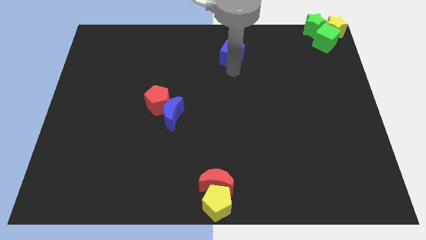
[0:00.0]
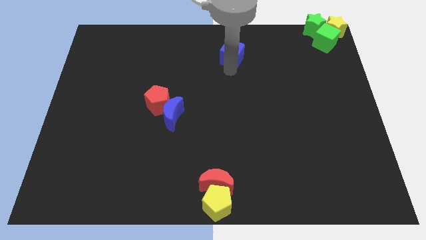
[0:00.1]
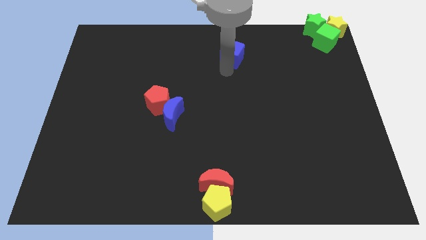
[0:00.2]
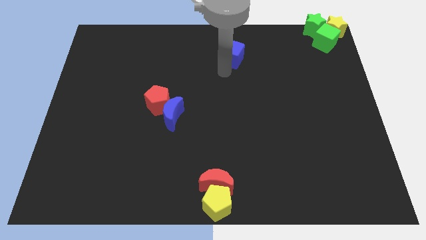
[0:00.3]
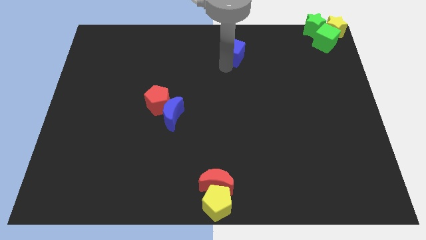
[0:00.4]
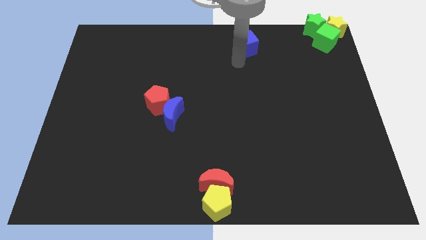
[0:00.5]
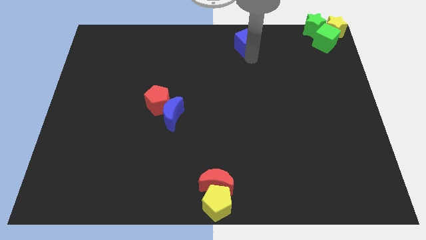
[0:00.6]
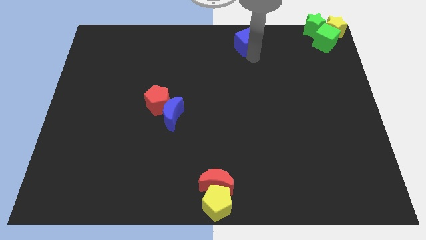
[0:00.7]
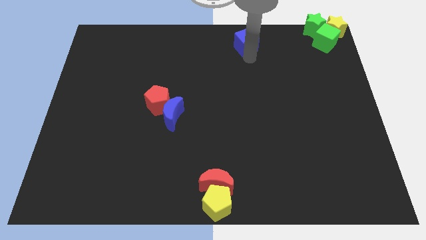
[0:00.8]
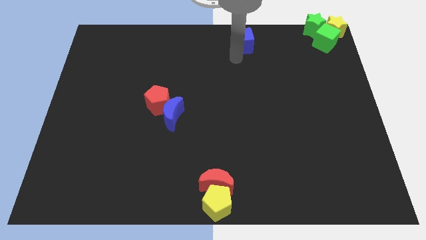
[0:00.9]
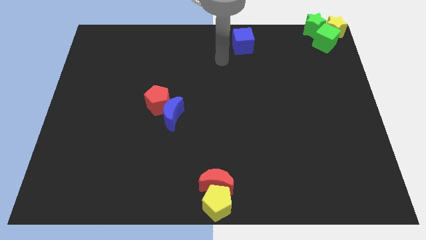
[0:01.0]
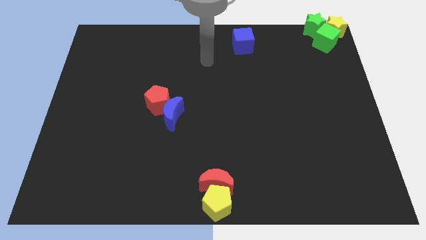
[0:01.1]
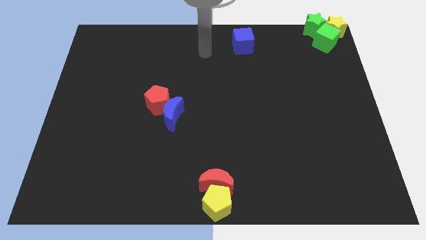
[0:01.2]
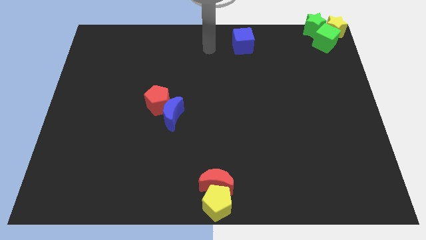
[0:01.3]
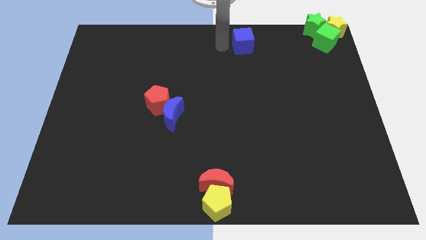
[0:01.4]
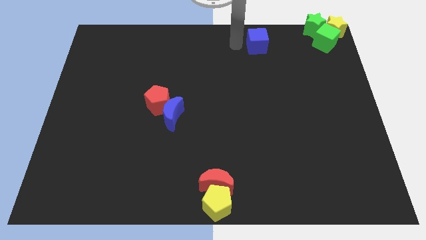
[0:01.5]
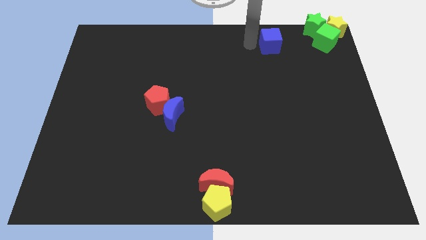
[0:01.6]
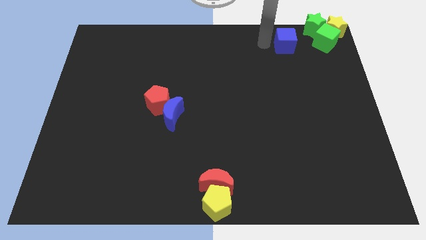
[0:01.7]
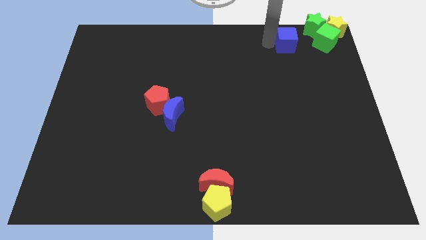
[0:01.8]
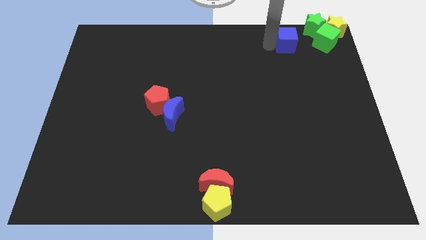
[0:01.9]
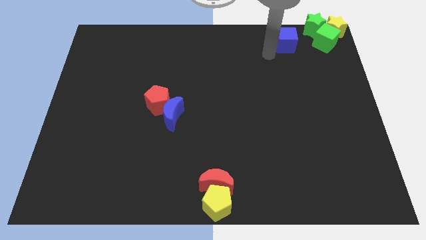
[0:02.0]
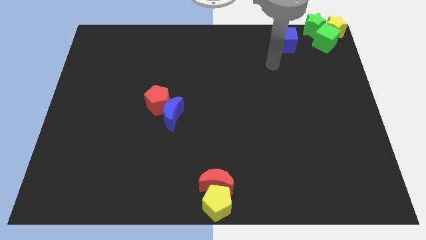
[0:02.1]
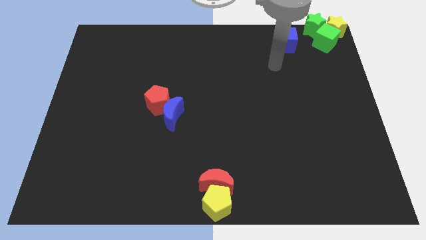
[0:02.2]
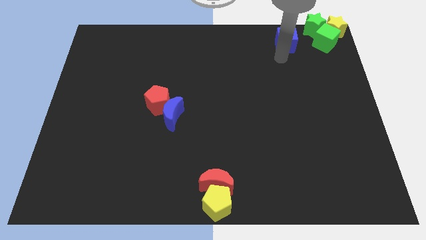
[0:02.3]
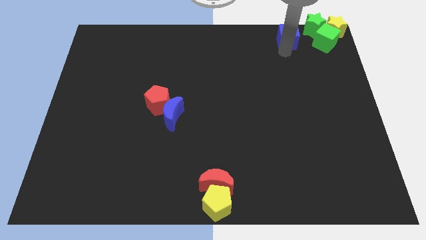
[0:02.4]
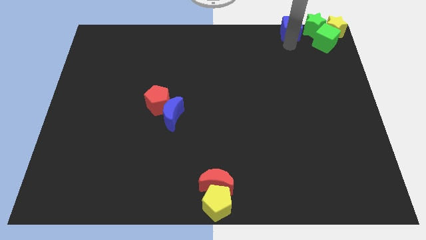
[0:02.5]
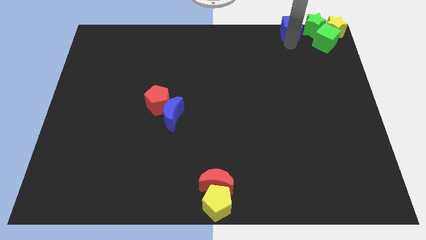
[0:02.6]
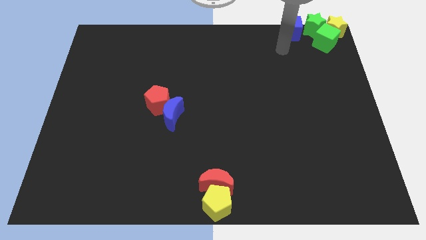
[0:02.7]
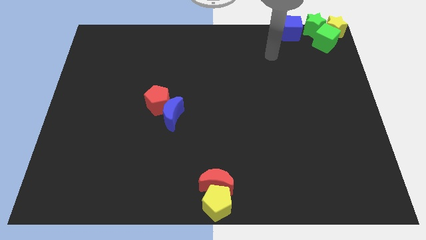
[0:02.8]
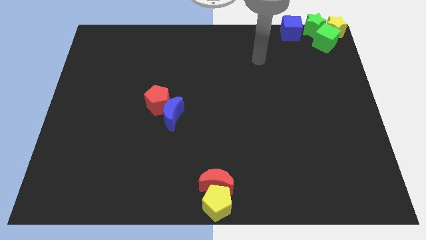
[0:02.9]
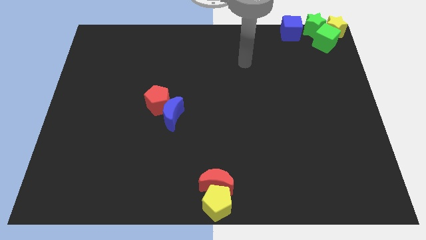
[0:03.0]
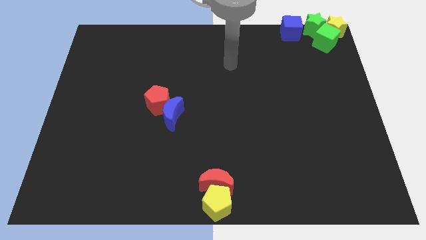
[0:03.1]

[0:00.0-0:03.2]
move the blue cube to the top right

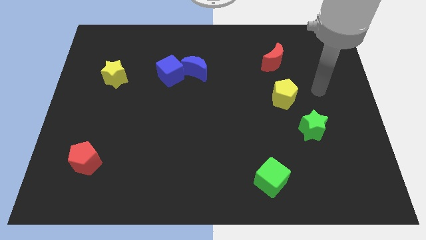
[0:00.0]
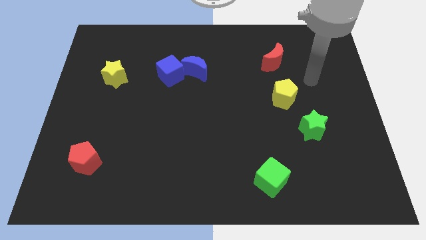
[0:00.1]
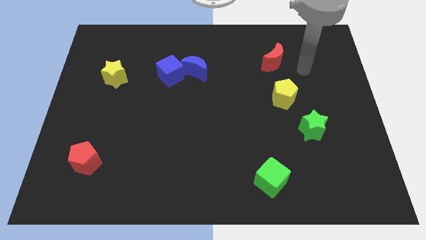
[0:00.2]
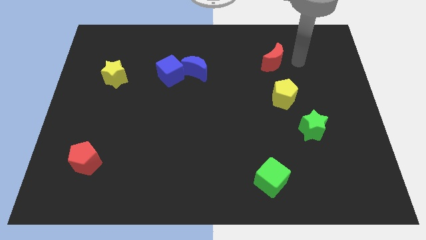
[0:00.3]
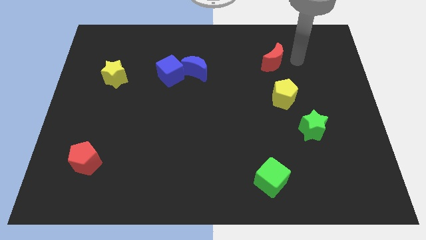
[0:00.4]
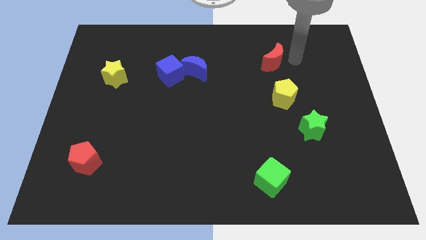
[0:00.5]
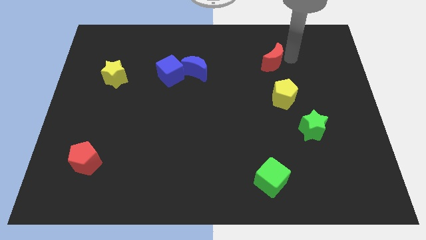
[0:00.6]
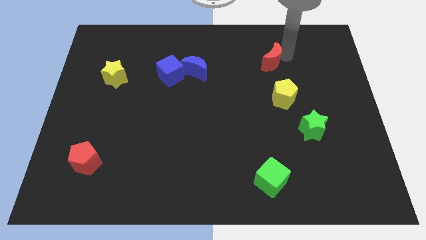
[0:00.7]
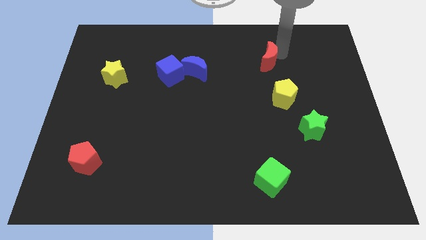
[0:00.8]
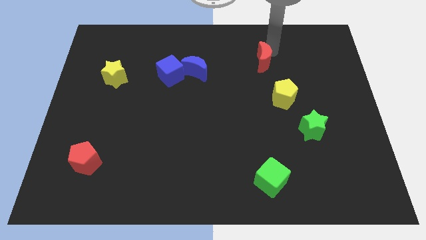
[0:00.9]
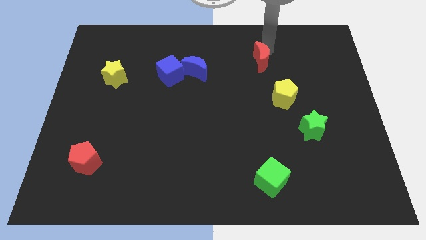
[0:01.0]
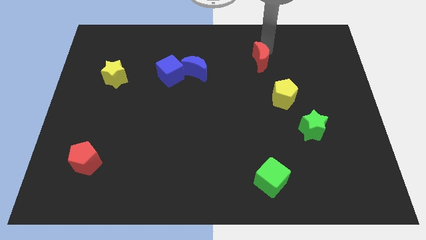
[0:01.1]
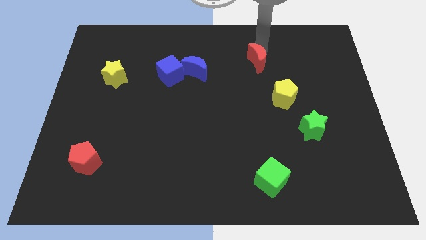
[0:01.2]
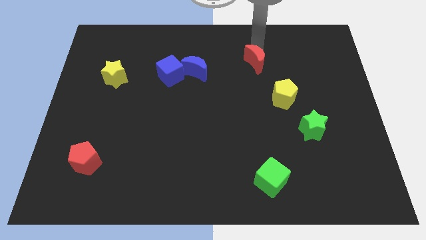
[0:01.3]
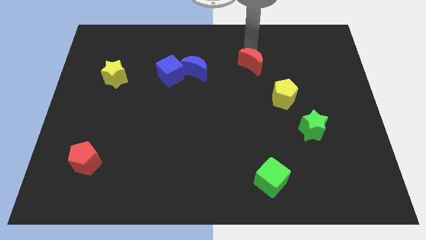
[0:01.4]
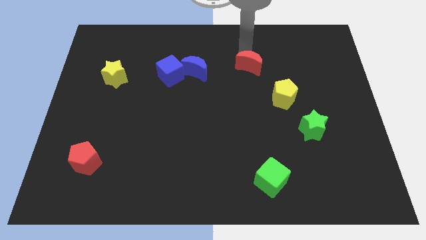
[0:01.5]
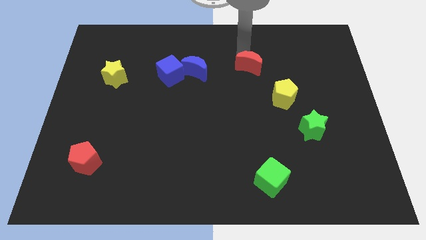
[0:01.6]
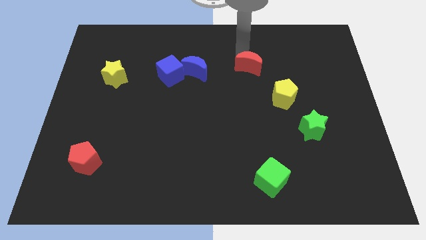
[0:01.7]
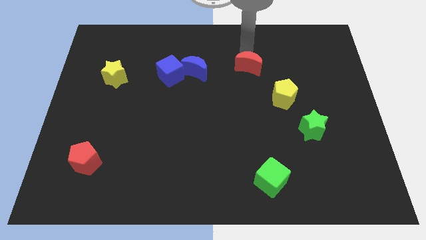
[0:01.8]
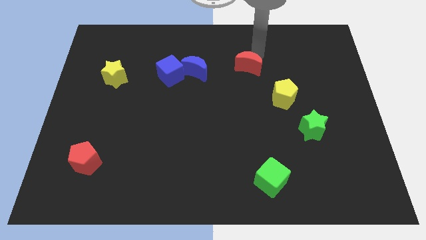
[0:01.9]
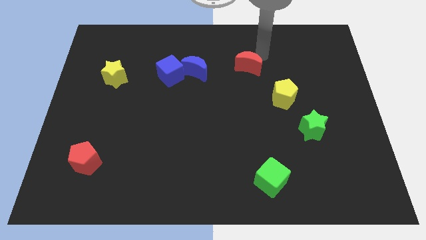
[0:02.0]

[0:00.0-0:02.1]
move the red crescent diagonal to the yellow pentagon

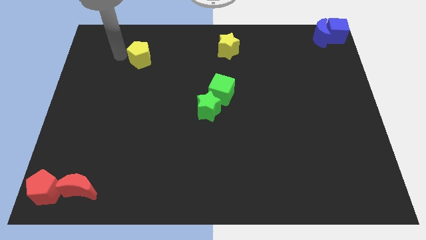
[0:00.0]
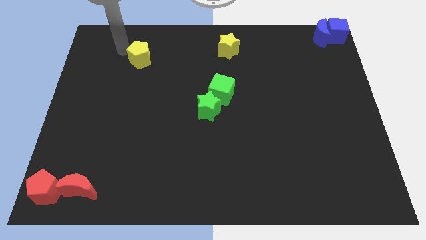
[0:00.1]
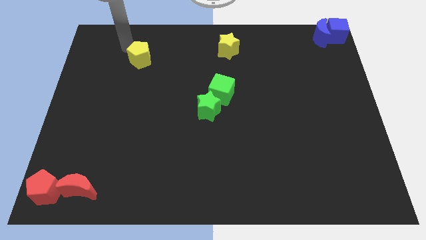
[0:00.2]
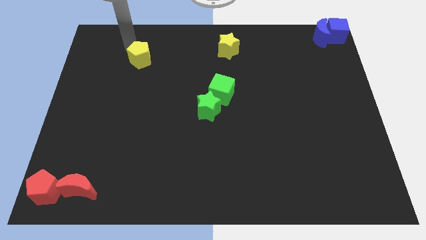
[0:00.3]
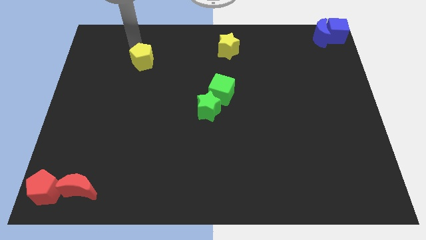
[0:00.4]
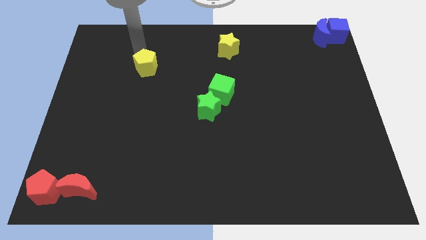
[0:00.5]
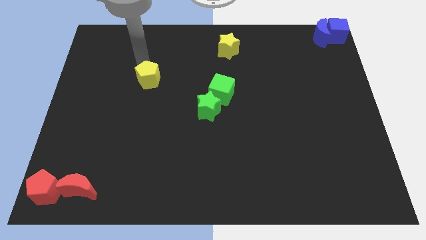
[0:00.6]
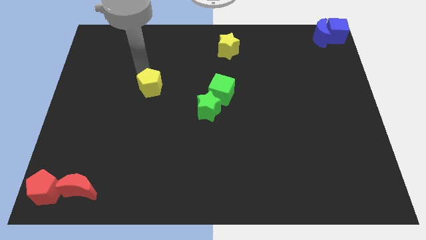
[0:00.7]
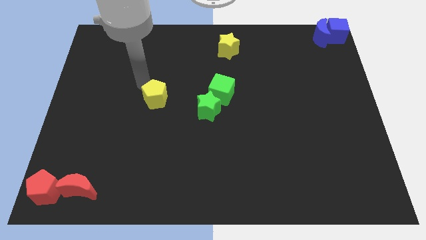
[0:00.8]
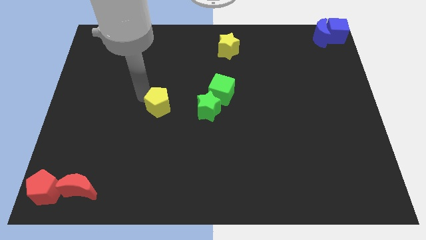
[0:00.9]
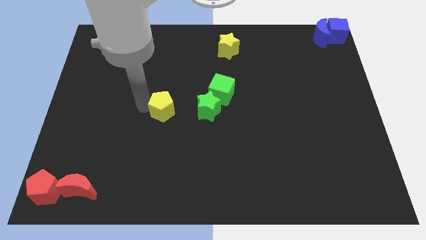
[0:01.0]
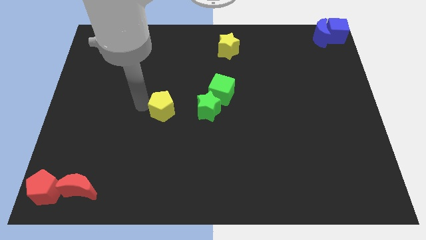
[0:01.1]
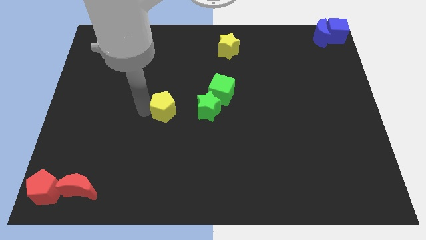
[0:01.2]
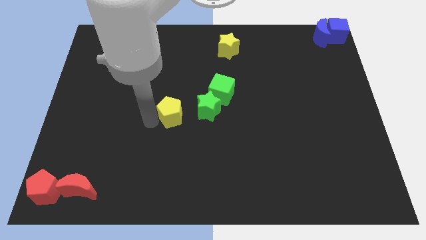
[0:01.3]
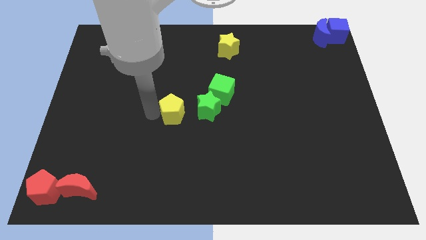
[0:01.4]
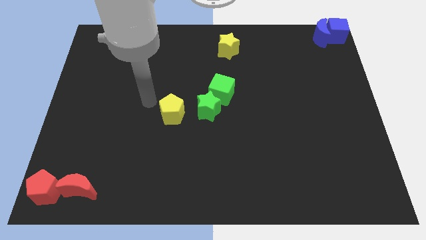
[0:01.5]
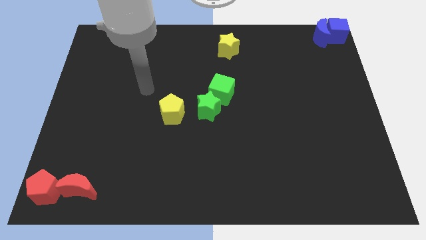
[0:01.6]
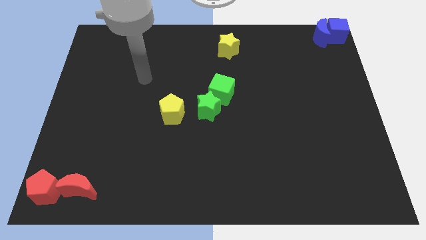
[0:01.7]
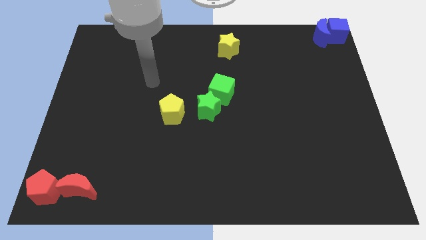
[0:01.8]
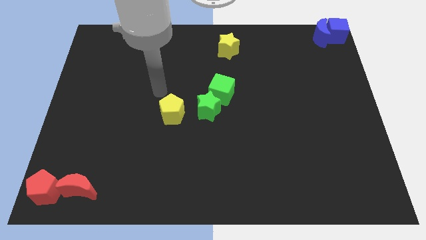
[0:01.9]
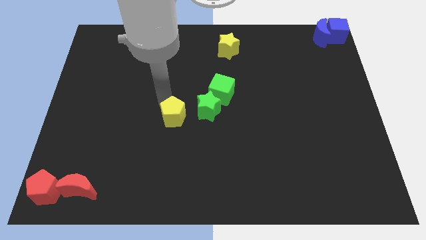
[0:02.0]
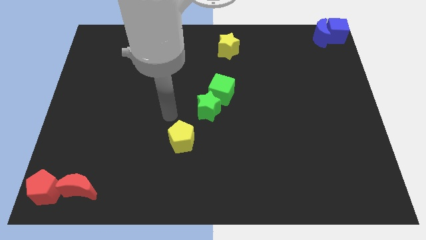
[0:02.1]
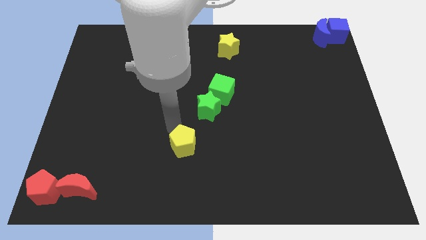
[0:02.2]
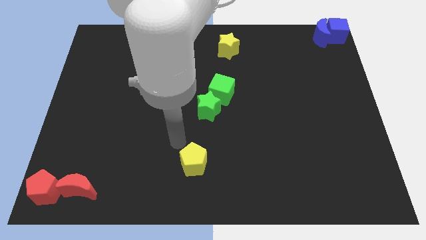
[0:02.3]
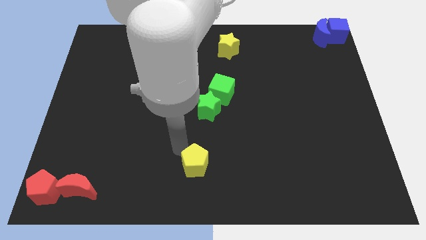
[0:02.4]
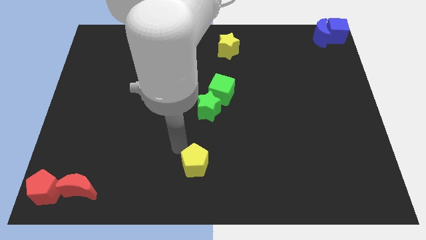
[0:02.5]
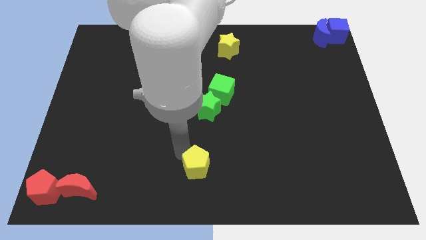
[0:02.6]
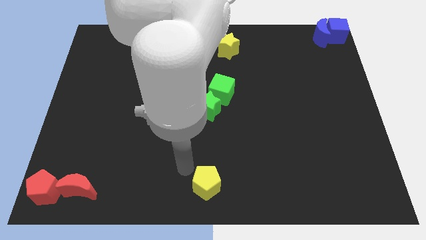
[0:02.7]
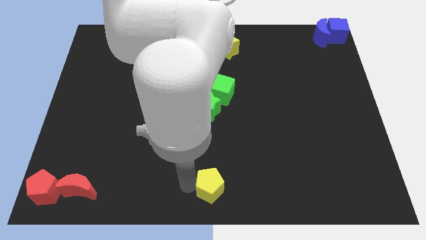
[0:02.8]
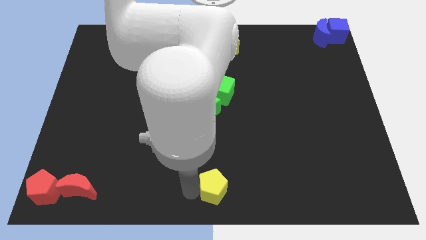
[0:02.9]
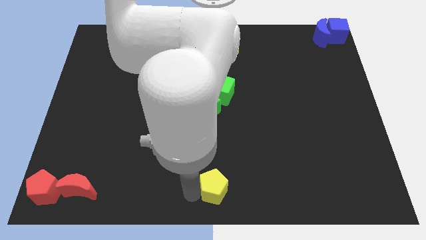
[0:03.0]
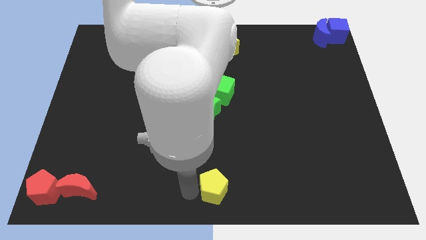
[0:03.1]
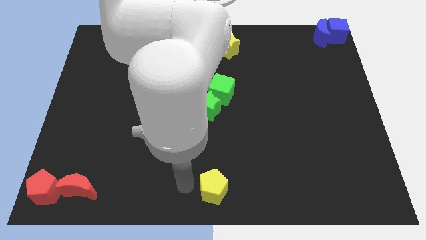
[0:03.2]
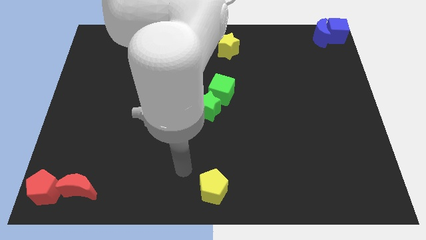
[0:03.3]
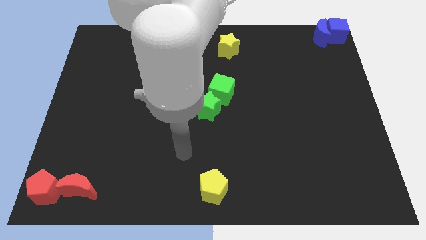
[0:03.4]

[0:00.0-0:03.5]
push yellow pentagon downwards
